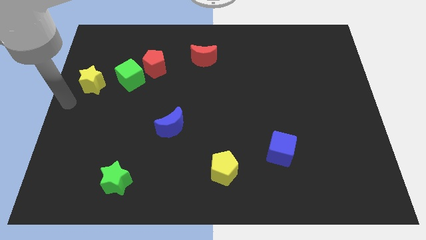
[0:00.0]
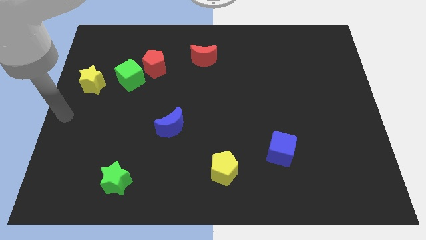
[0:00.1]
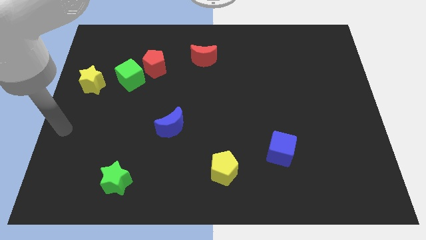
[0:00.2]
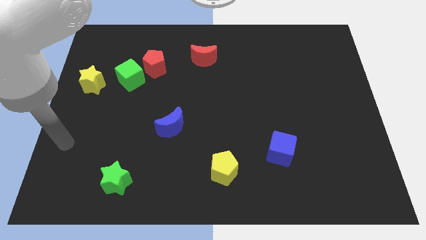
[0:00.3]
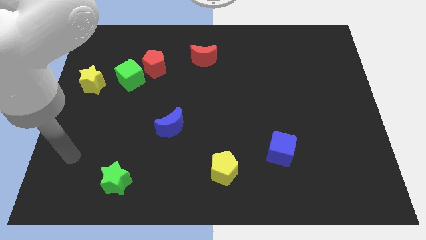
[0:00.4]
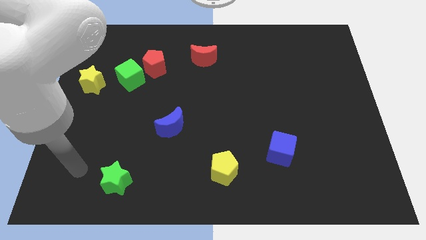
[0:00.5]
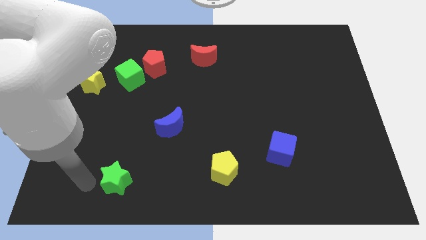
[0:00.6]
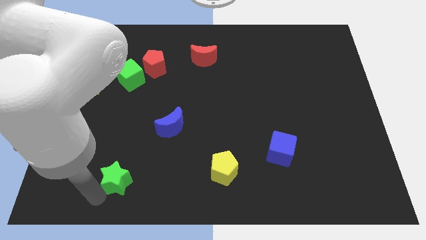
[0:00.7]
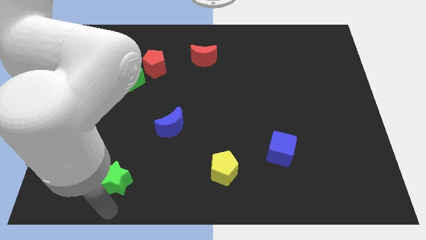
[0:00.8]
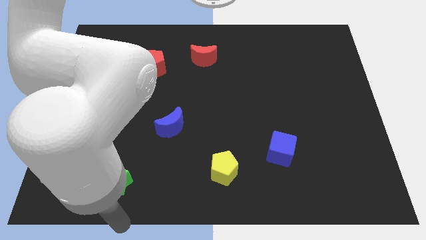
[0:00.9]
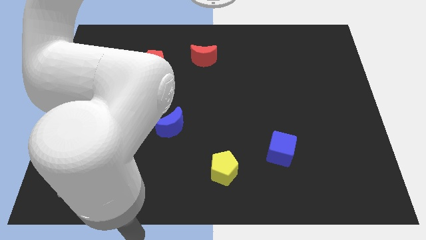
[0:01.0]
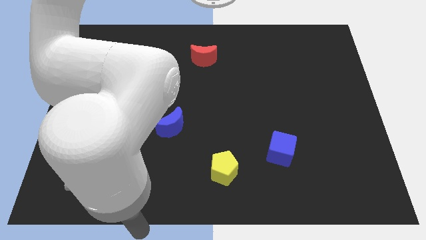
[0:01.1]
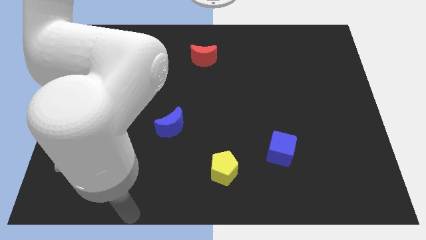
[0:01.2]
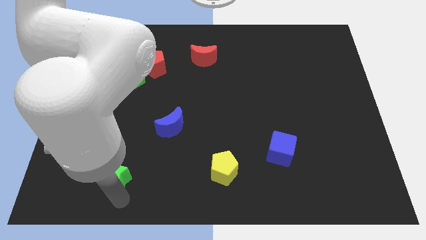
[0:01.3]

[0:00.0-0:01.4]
move the green block slightly towards the top side of the board

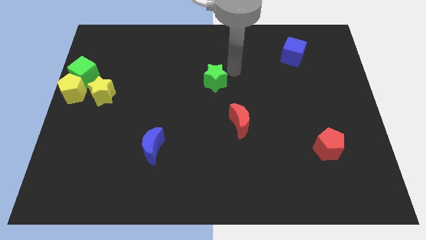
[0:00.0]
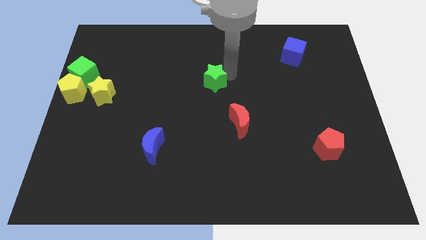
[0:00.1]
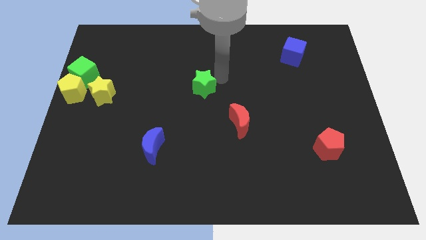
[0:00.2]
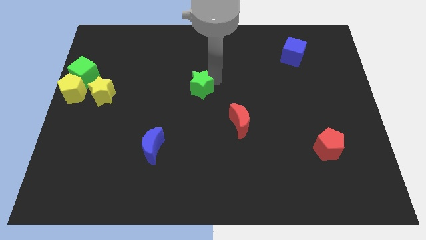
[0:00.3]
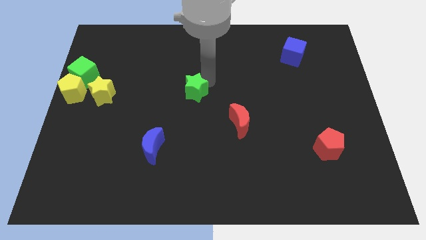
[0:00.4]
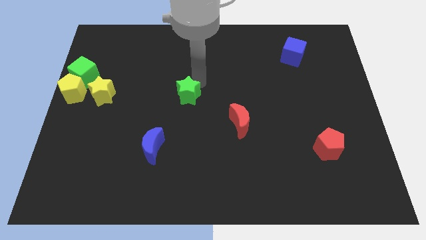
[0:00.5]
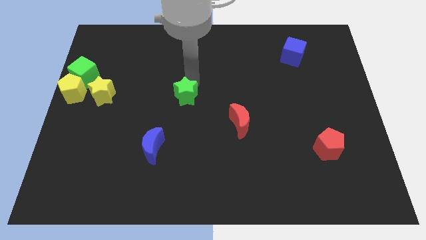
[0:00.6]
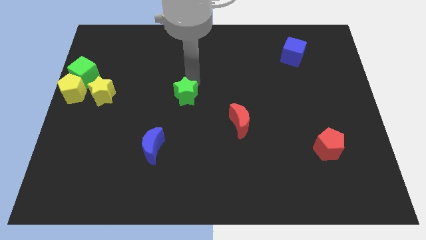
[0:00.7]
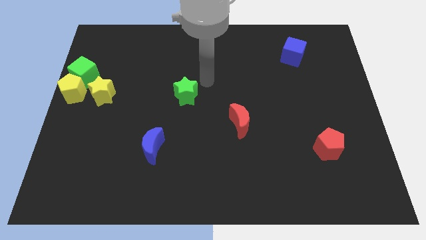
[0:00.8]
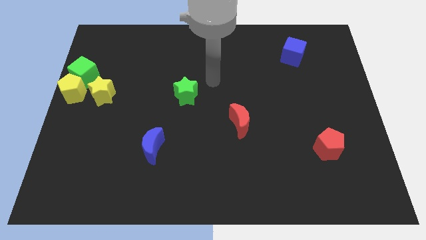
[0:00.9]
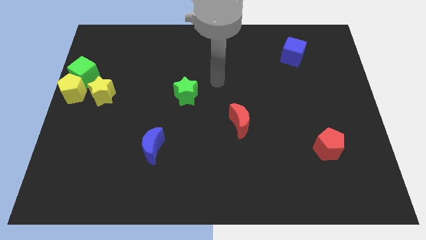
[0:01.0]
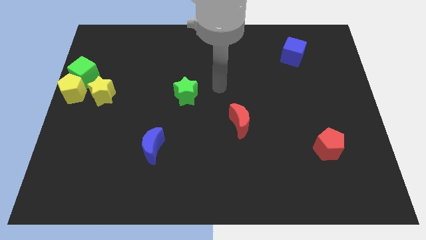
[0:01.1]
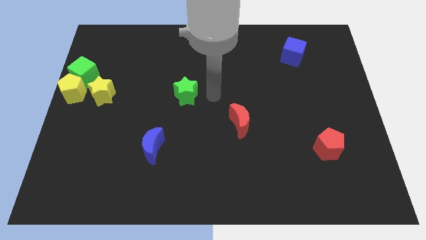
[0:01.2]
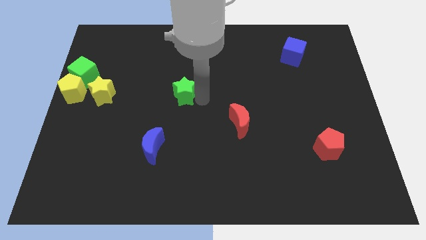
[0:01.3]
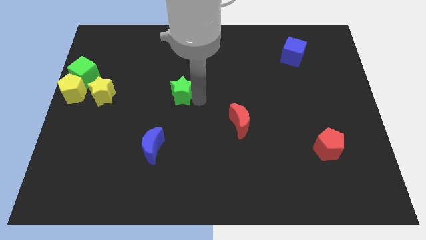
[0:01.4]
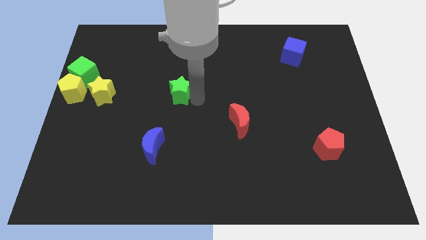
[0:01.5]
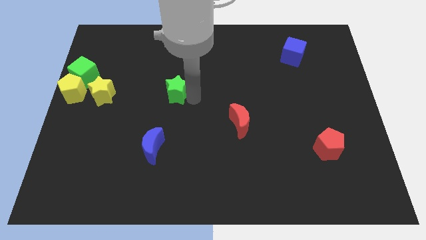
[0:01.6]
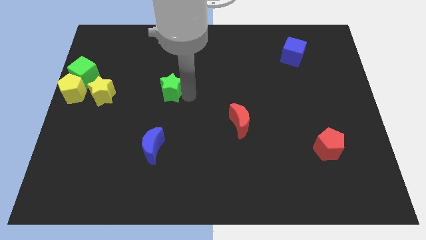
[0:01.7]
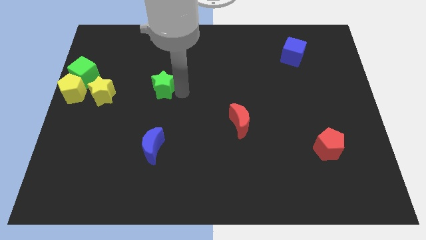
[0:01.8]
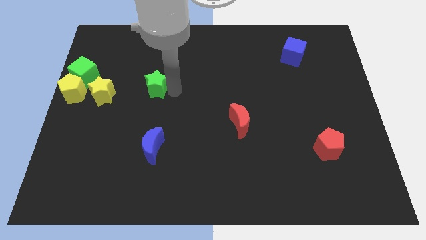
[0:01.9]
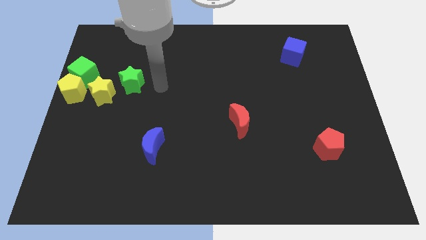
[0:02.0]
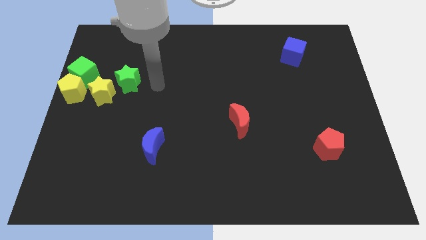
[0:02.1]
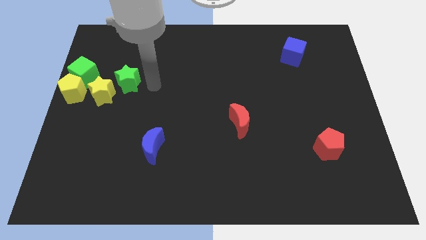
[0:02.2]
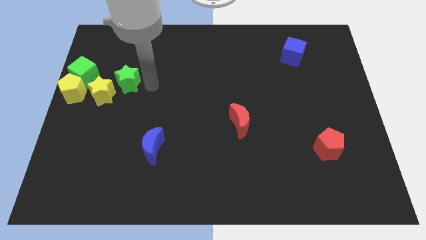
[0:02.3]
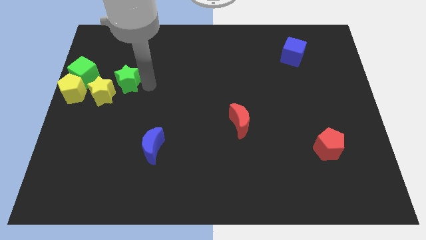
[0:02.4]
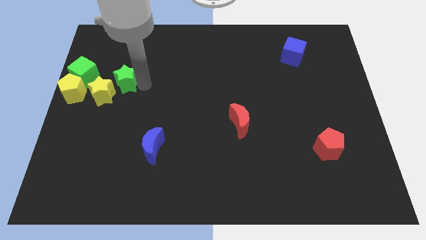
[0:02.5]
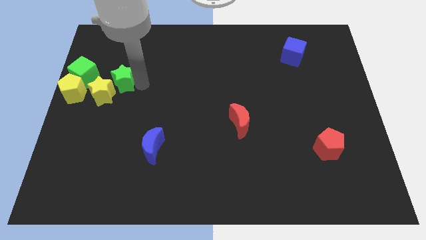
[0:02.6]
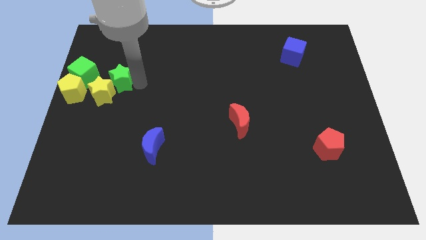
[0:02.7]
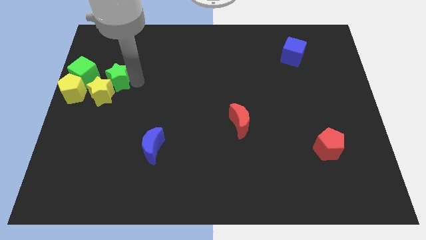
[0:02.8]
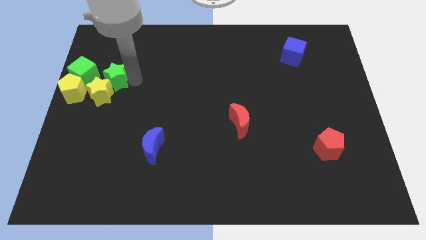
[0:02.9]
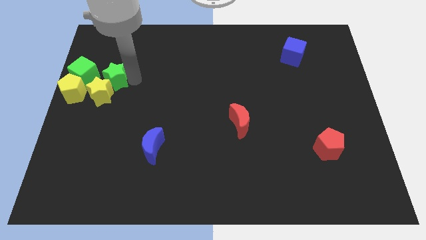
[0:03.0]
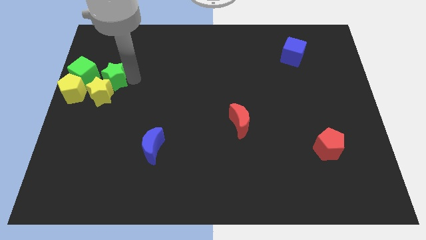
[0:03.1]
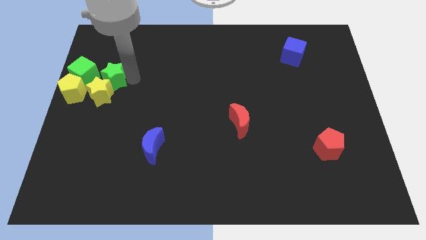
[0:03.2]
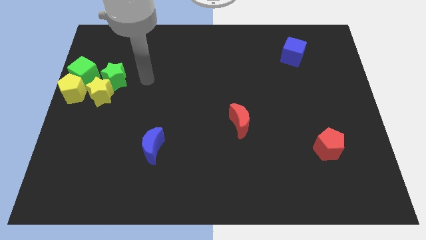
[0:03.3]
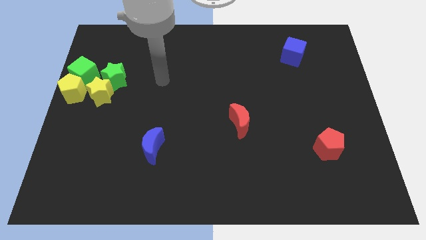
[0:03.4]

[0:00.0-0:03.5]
move the green star above the yellow star

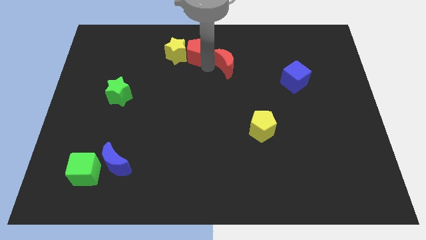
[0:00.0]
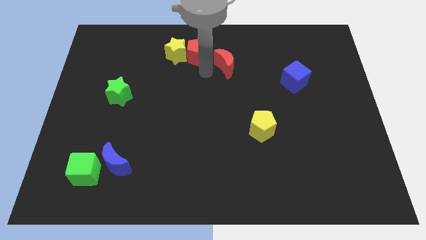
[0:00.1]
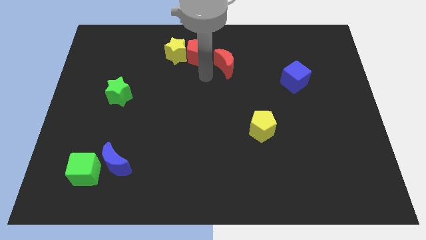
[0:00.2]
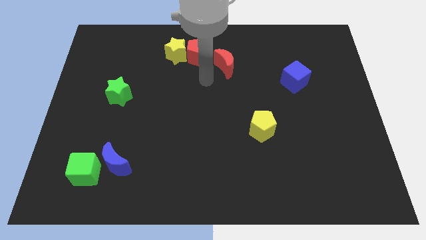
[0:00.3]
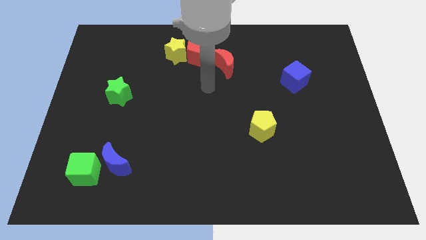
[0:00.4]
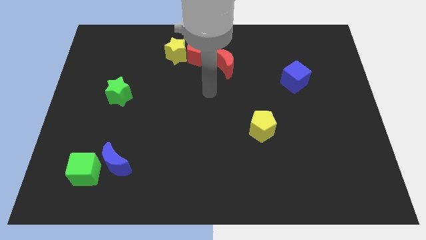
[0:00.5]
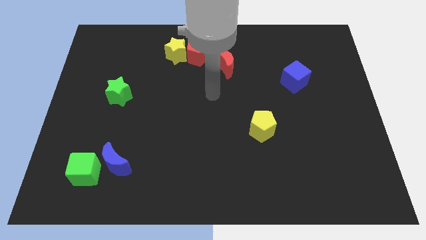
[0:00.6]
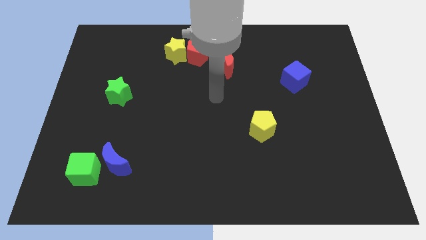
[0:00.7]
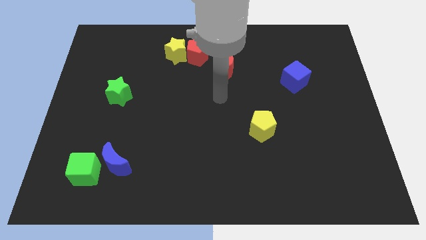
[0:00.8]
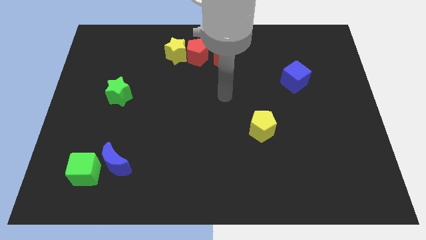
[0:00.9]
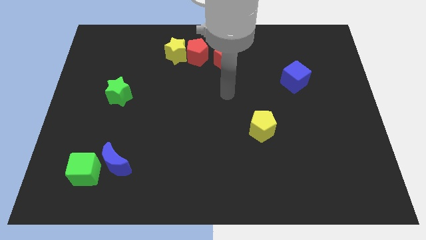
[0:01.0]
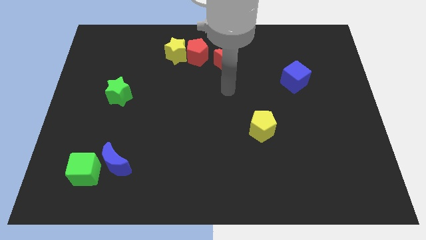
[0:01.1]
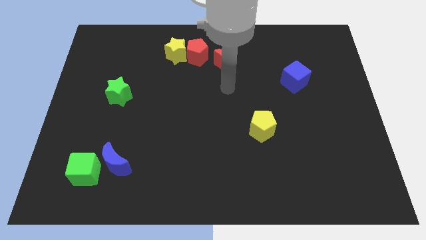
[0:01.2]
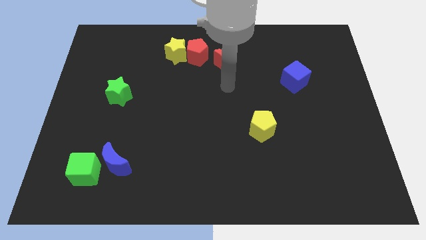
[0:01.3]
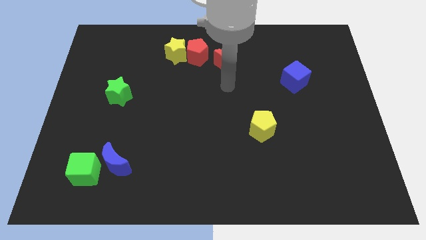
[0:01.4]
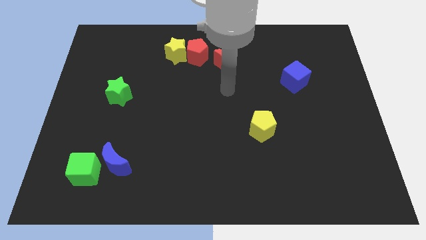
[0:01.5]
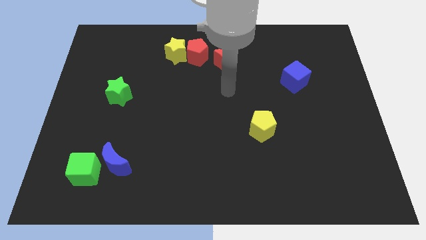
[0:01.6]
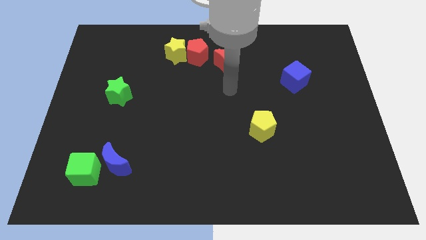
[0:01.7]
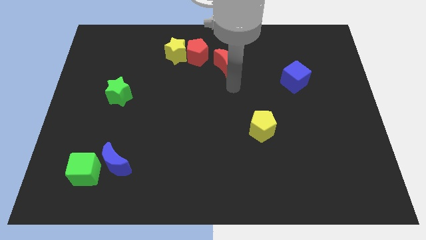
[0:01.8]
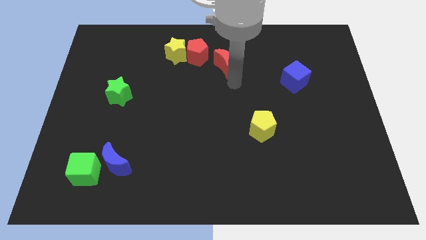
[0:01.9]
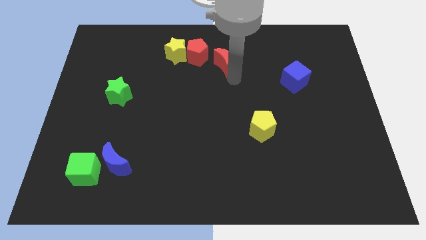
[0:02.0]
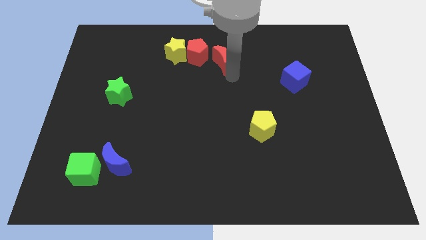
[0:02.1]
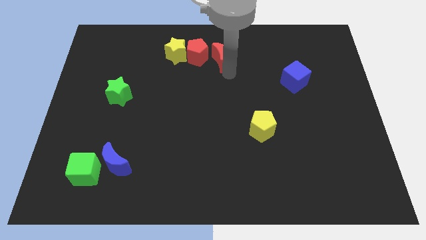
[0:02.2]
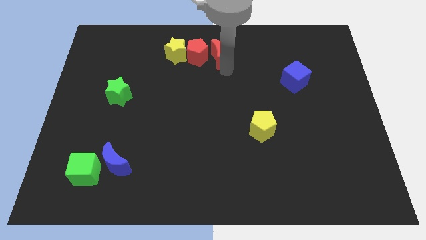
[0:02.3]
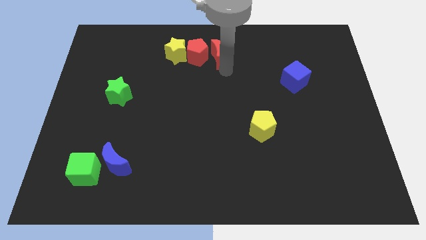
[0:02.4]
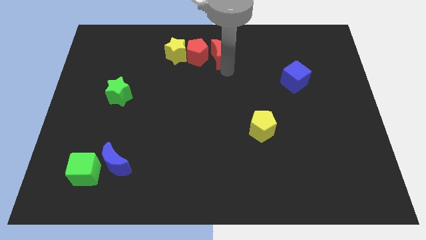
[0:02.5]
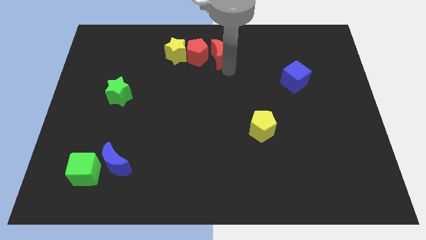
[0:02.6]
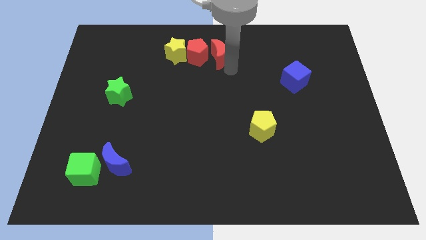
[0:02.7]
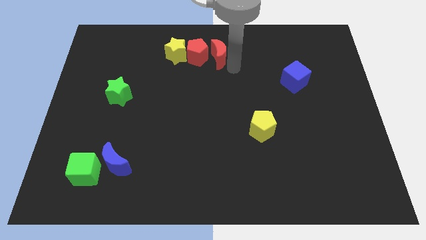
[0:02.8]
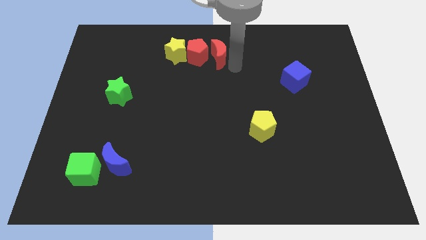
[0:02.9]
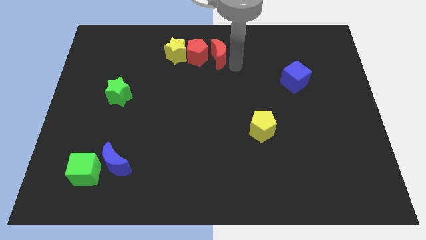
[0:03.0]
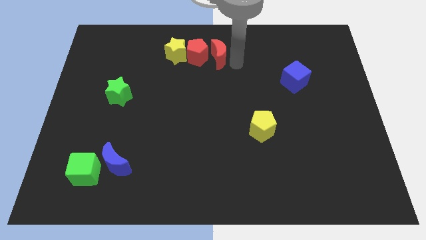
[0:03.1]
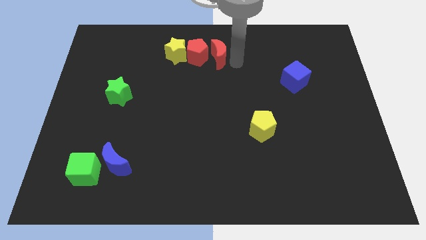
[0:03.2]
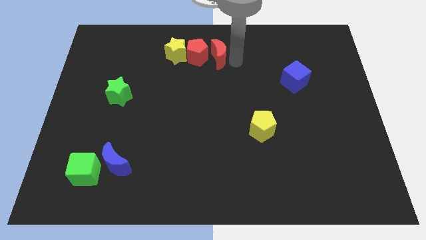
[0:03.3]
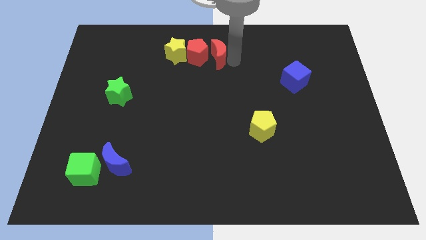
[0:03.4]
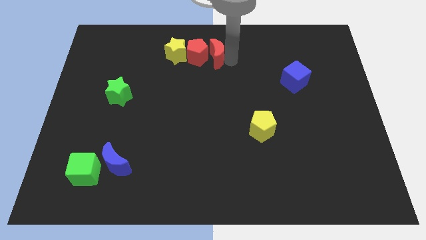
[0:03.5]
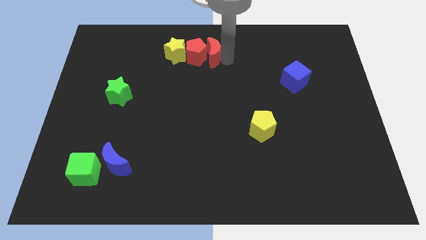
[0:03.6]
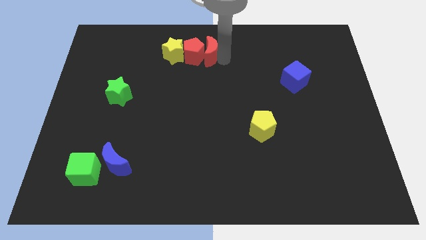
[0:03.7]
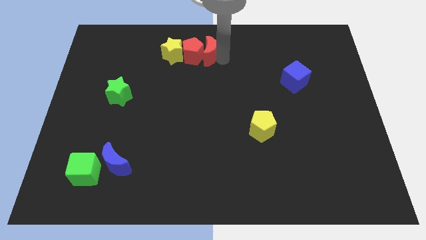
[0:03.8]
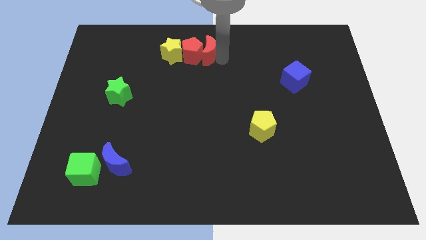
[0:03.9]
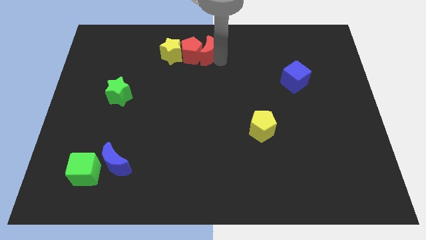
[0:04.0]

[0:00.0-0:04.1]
move red moon into red pentagon
